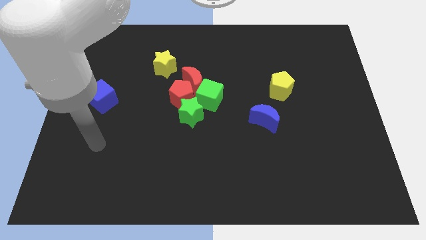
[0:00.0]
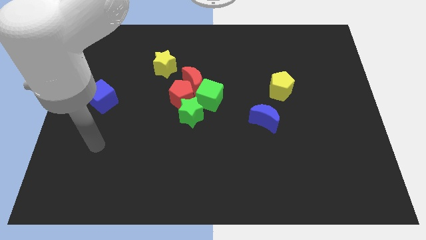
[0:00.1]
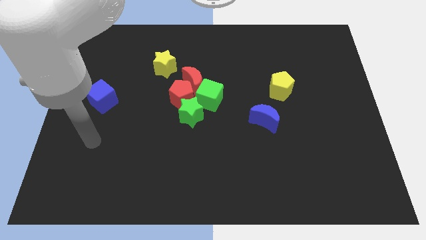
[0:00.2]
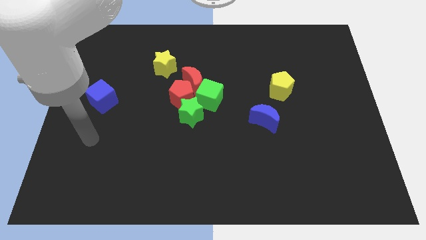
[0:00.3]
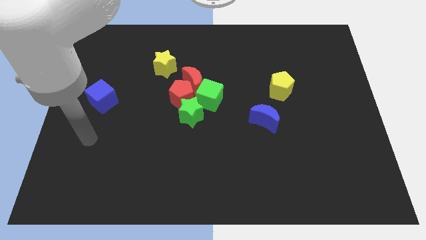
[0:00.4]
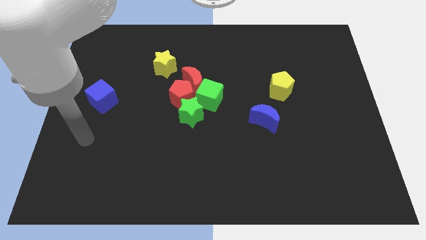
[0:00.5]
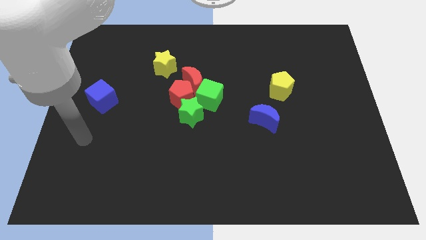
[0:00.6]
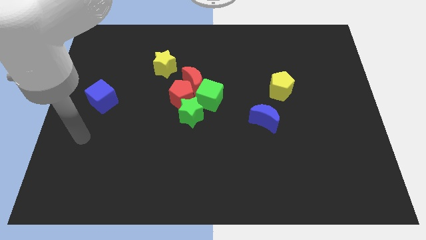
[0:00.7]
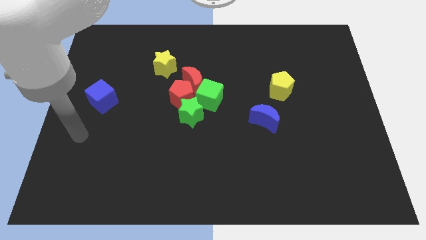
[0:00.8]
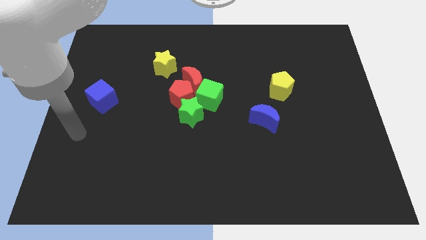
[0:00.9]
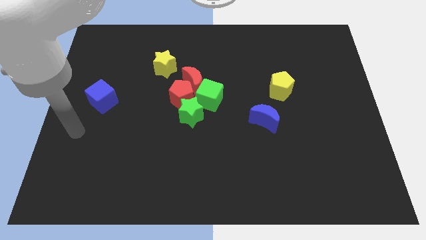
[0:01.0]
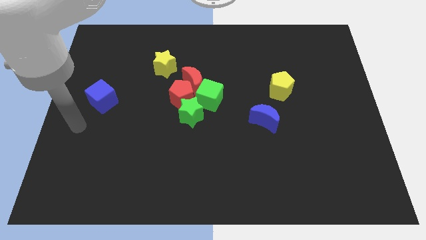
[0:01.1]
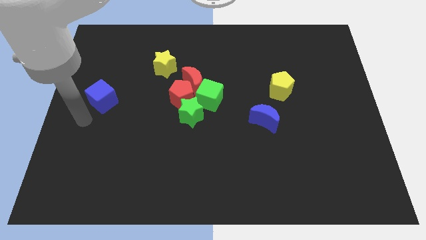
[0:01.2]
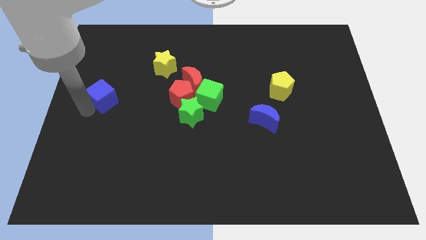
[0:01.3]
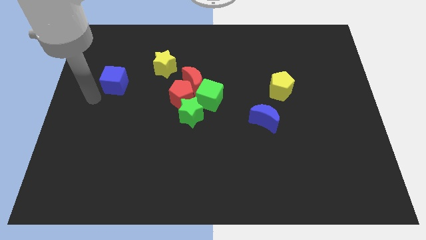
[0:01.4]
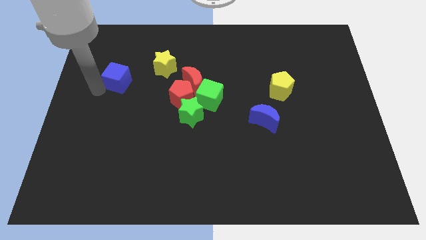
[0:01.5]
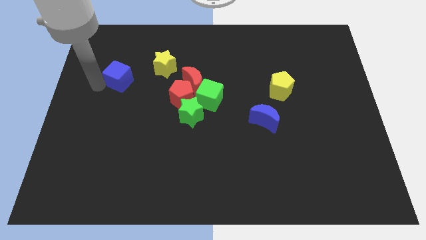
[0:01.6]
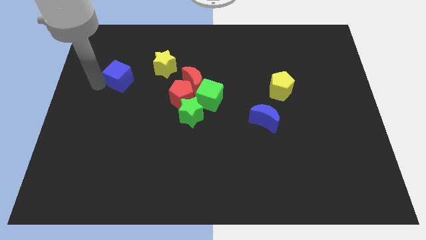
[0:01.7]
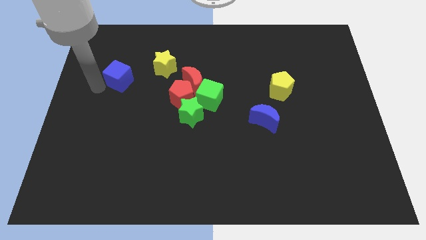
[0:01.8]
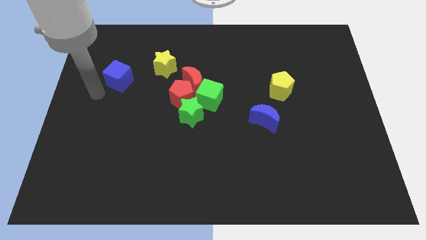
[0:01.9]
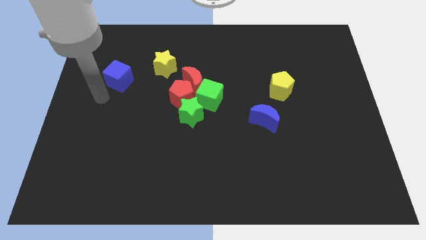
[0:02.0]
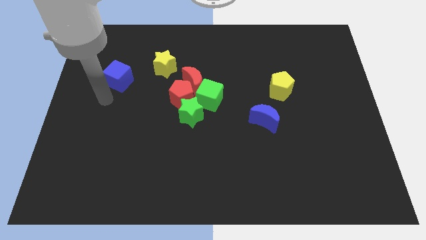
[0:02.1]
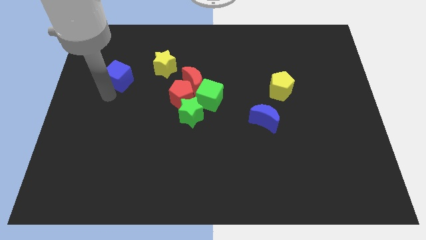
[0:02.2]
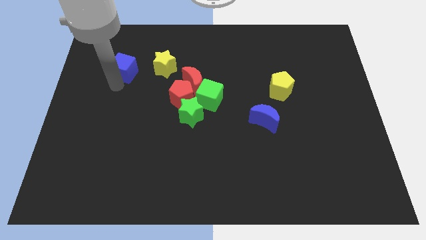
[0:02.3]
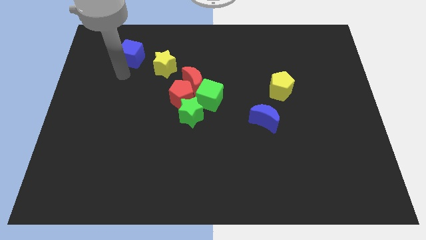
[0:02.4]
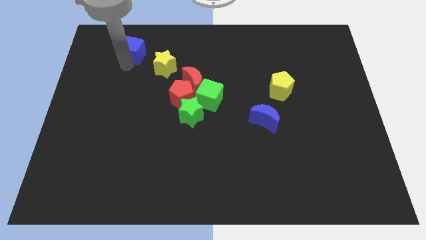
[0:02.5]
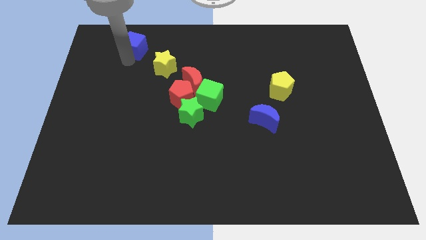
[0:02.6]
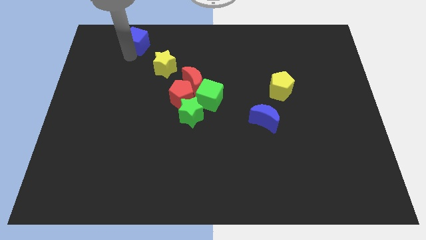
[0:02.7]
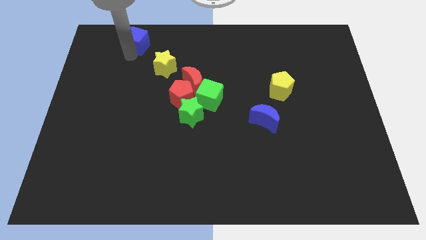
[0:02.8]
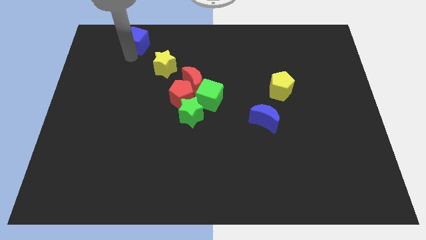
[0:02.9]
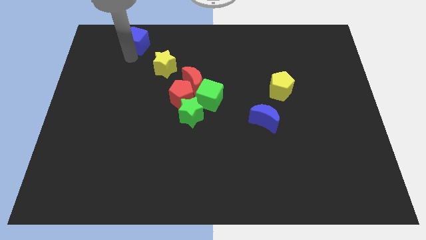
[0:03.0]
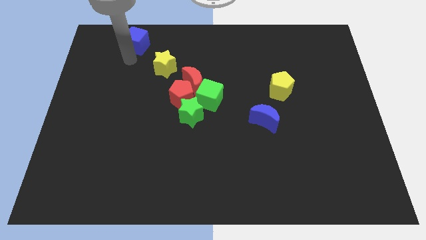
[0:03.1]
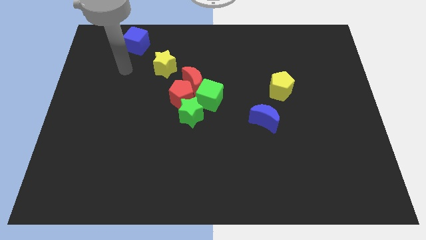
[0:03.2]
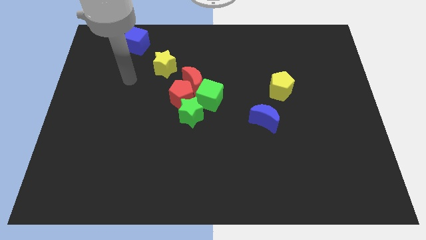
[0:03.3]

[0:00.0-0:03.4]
slide the blue cube diagonally to the top left of the yellow star

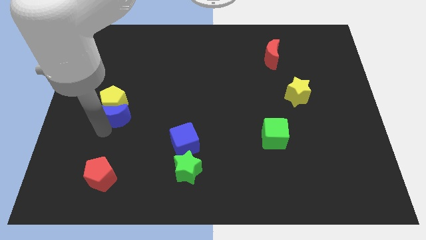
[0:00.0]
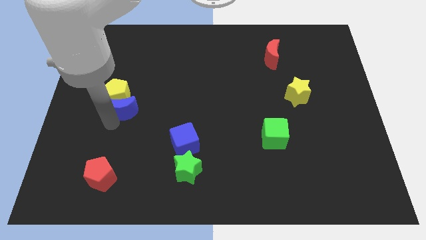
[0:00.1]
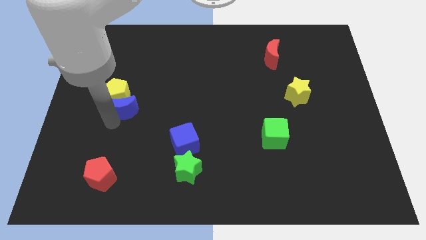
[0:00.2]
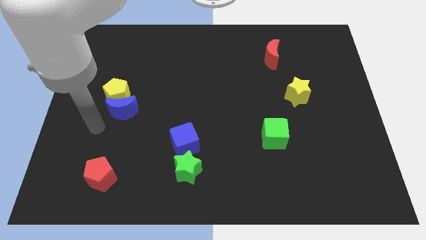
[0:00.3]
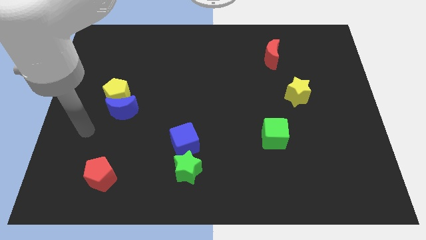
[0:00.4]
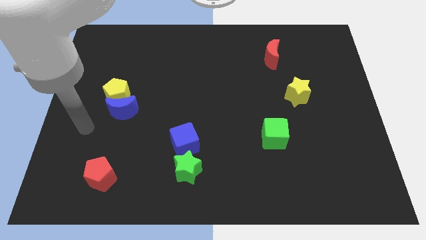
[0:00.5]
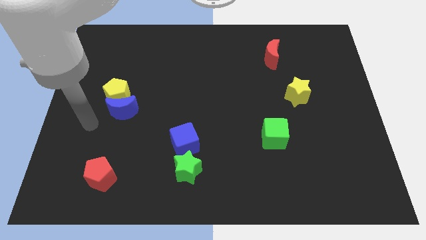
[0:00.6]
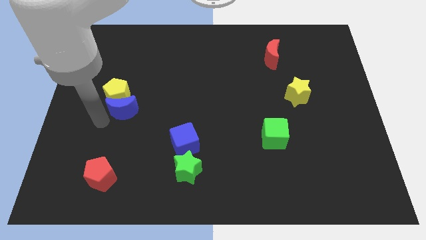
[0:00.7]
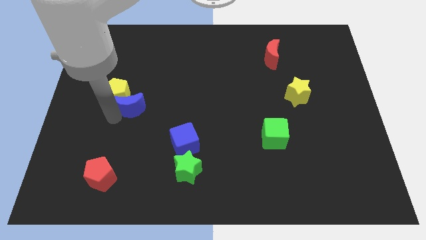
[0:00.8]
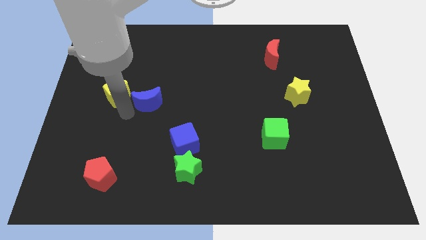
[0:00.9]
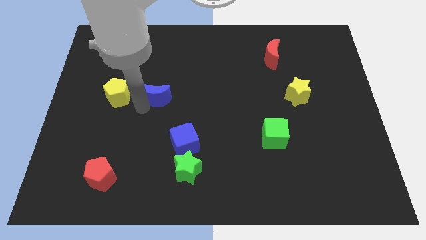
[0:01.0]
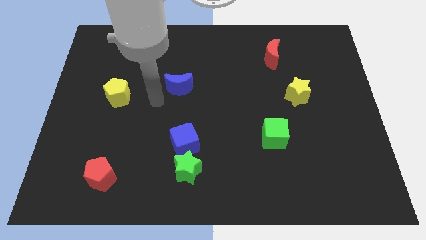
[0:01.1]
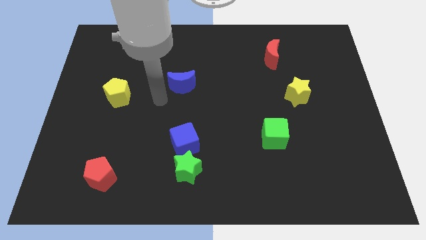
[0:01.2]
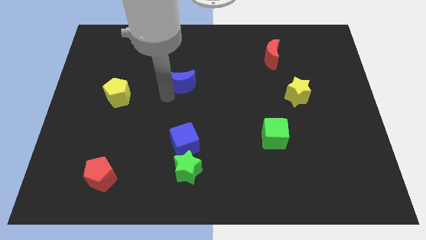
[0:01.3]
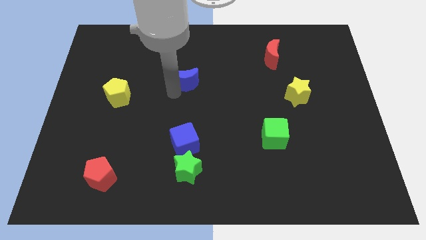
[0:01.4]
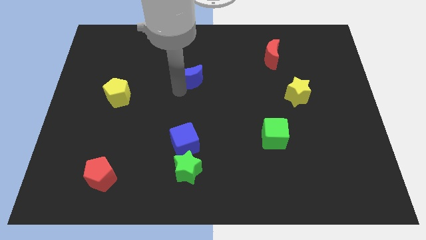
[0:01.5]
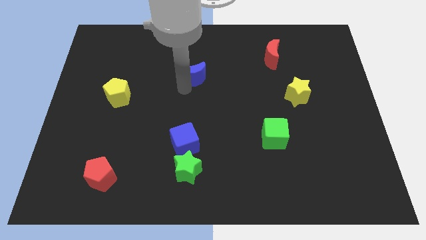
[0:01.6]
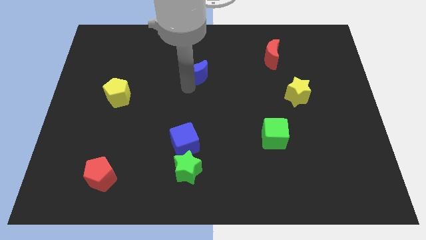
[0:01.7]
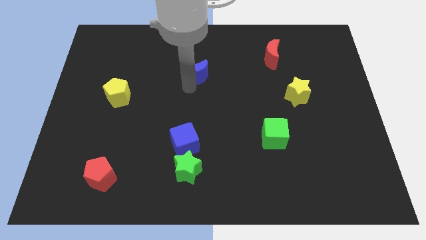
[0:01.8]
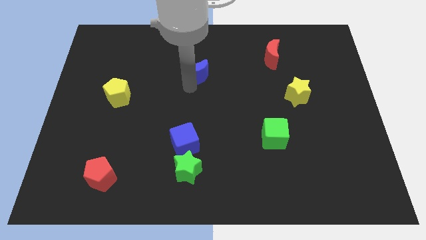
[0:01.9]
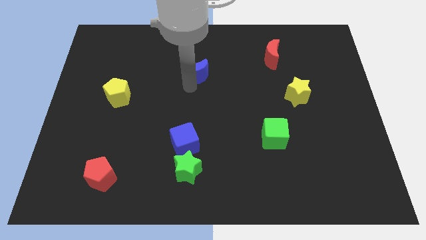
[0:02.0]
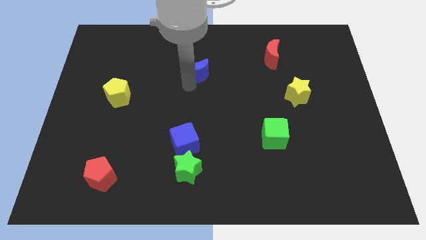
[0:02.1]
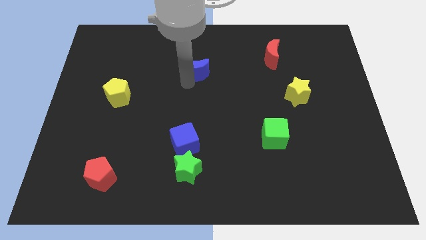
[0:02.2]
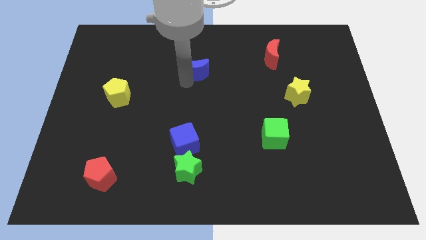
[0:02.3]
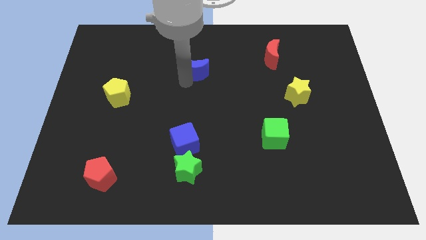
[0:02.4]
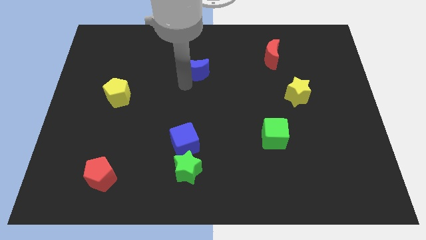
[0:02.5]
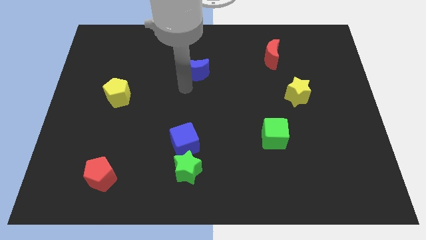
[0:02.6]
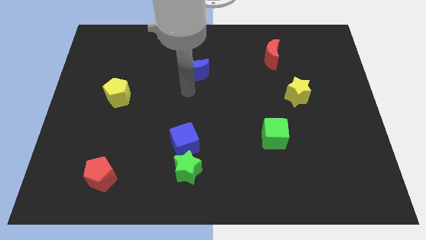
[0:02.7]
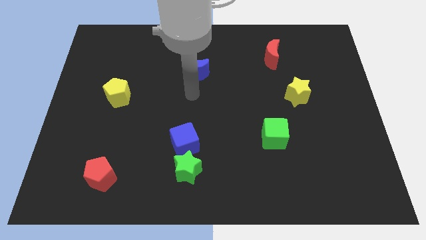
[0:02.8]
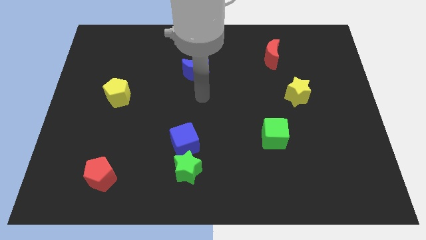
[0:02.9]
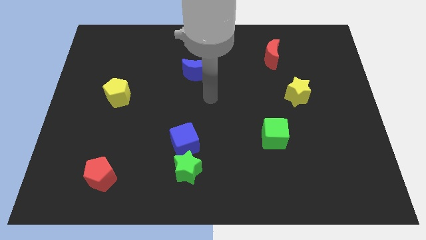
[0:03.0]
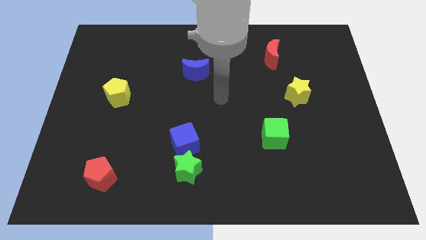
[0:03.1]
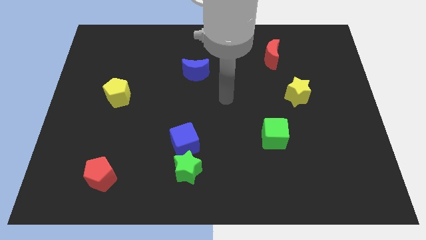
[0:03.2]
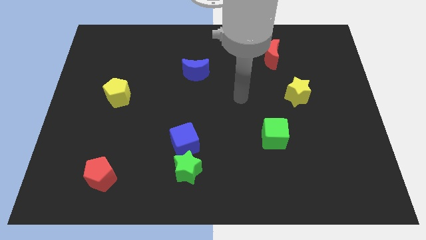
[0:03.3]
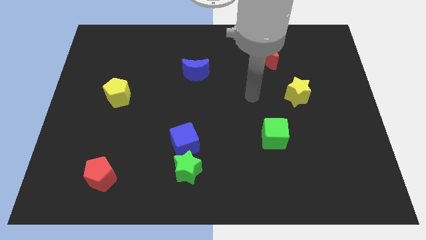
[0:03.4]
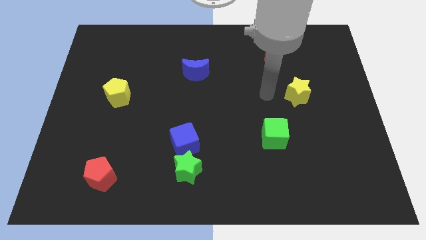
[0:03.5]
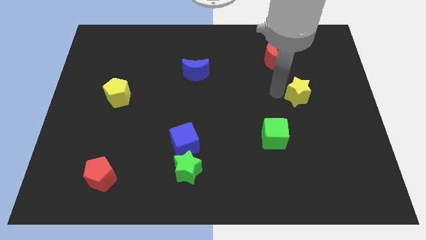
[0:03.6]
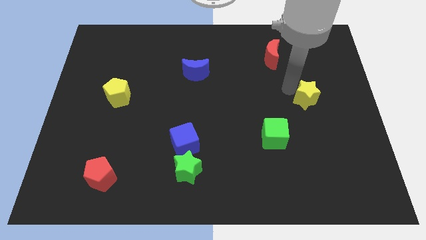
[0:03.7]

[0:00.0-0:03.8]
move the blue crescent diagonal to the green cube

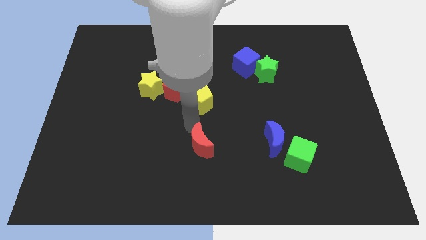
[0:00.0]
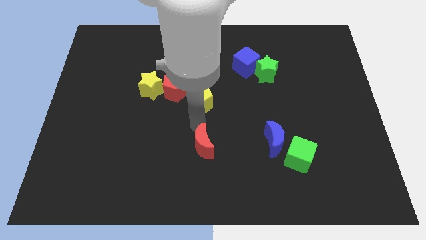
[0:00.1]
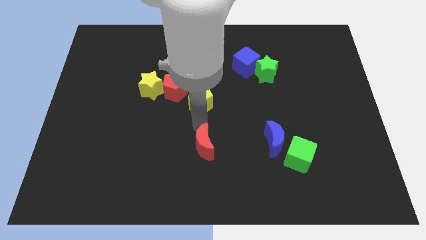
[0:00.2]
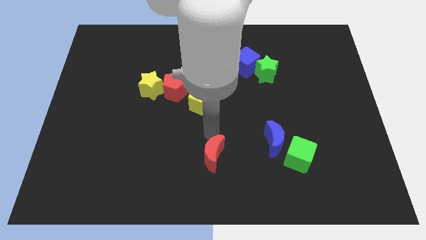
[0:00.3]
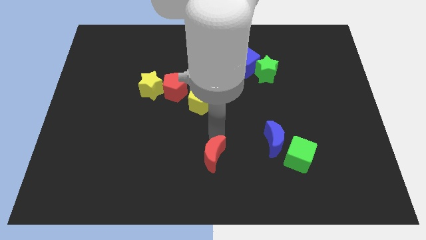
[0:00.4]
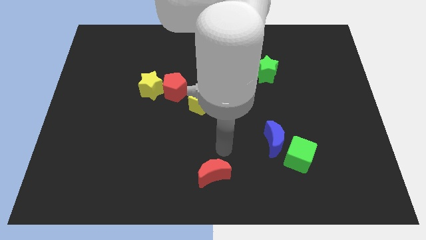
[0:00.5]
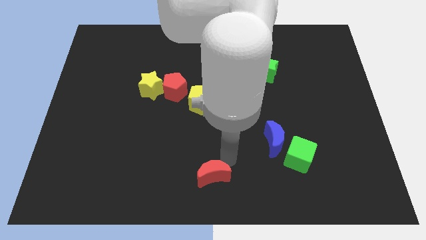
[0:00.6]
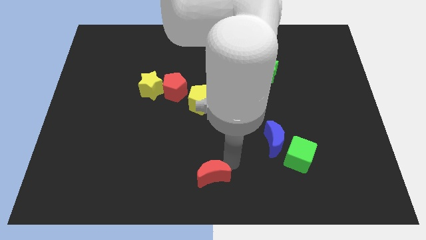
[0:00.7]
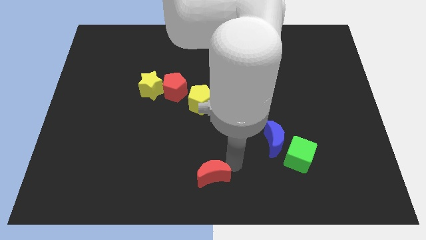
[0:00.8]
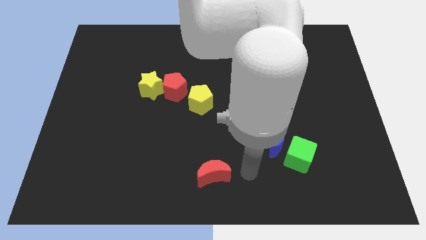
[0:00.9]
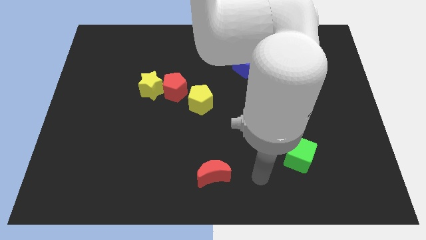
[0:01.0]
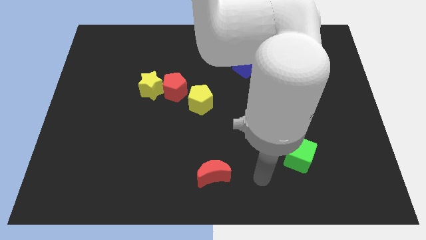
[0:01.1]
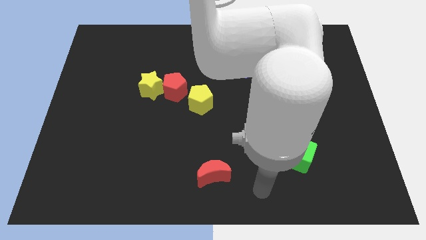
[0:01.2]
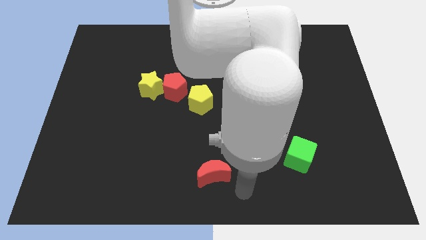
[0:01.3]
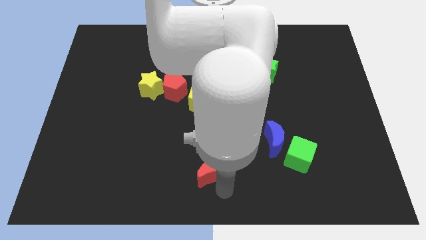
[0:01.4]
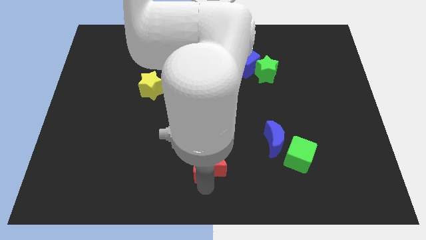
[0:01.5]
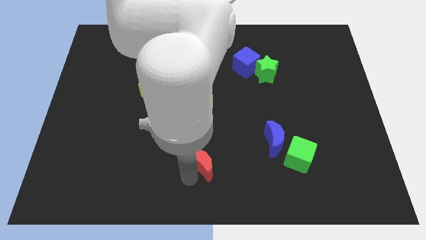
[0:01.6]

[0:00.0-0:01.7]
move the red crescent to the left of the green cube
